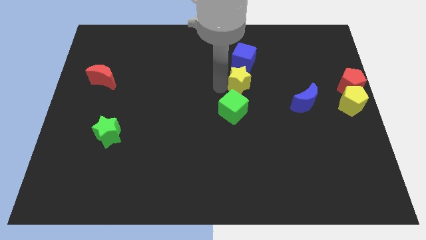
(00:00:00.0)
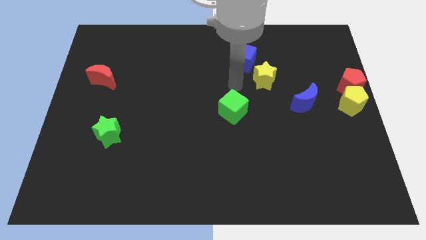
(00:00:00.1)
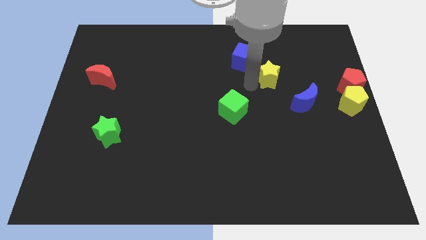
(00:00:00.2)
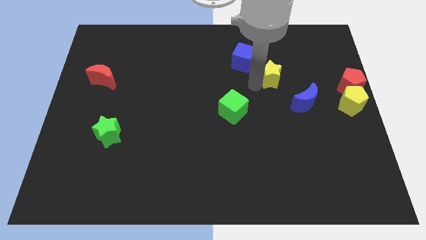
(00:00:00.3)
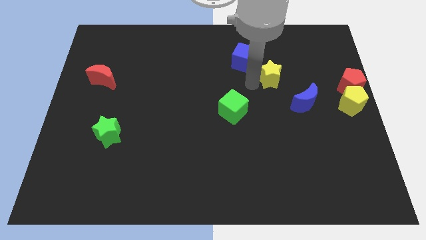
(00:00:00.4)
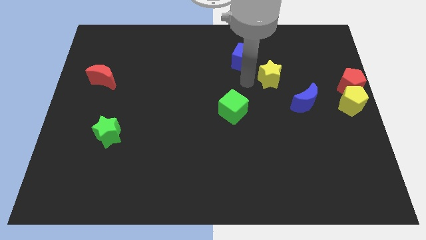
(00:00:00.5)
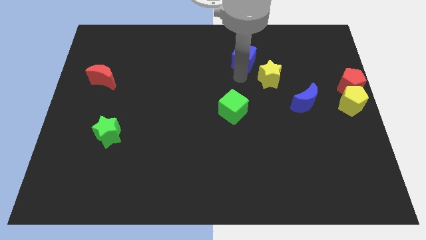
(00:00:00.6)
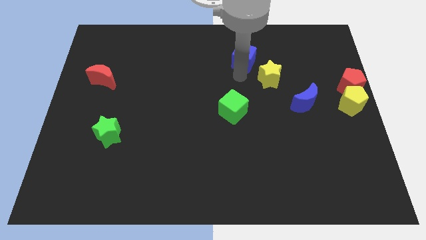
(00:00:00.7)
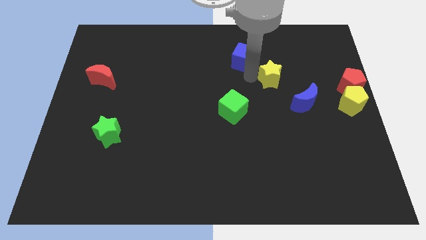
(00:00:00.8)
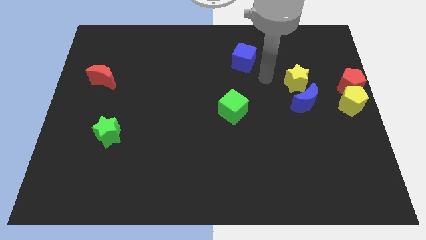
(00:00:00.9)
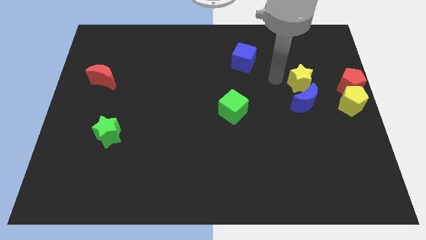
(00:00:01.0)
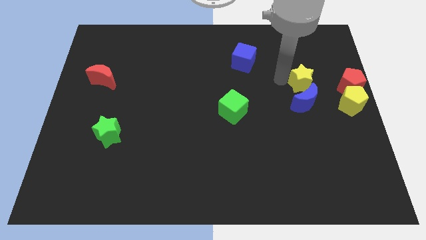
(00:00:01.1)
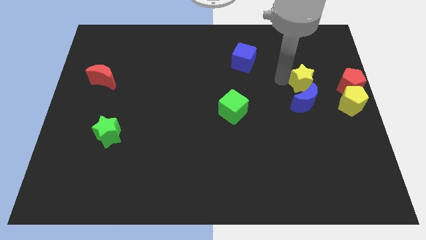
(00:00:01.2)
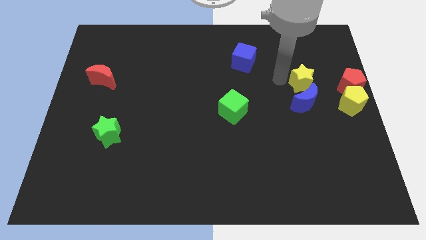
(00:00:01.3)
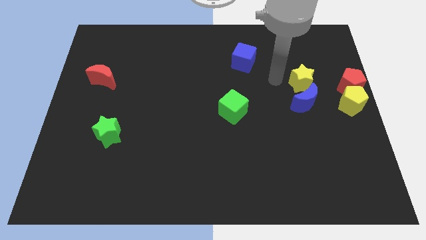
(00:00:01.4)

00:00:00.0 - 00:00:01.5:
move the yellow star to the top side of the blue moon

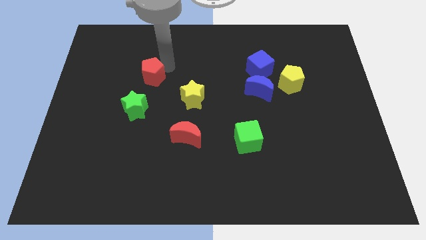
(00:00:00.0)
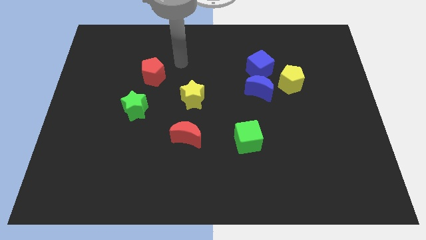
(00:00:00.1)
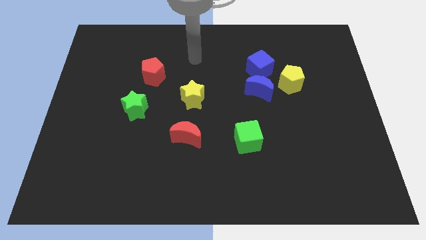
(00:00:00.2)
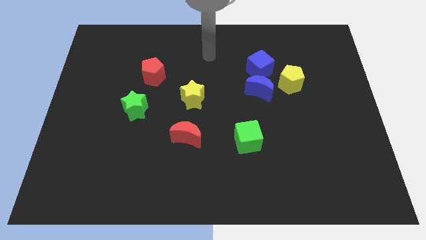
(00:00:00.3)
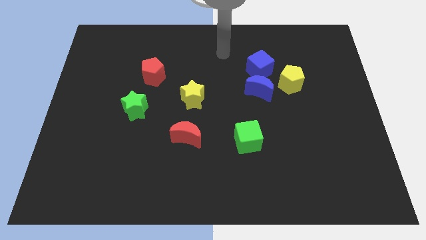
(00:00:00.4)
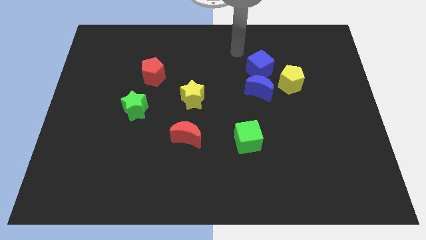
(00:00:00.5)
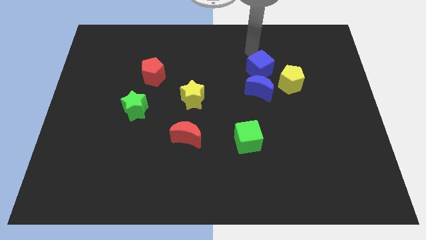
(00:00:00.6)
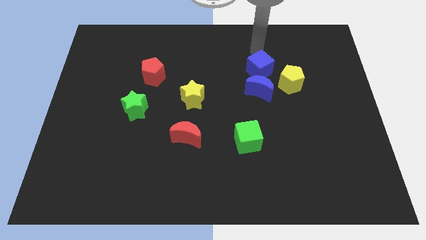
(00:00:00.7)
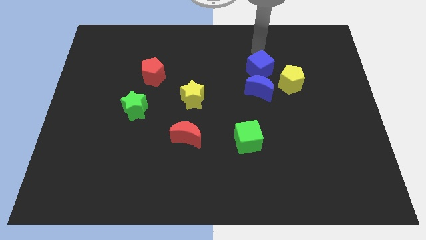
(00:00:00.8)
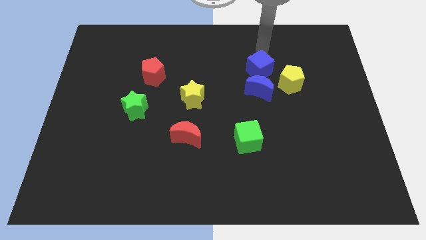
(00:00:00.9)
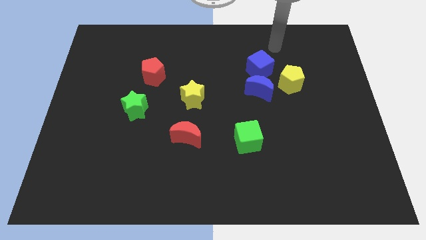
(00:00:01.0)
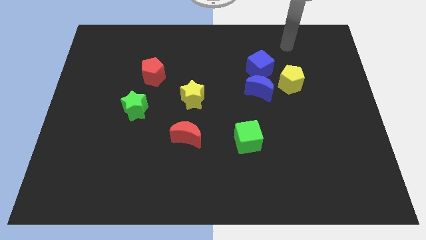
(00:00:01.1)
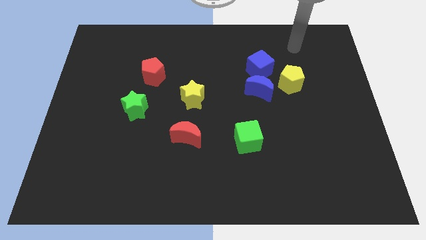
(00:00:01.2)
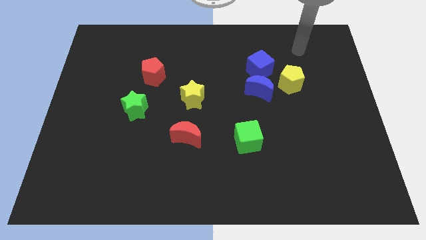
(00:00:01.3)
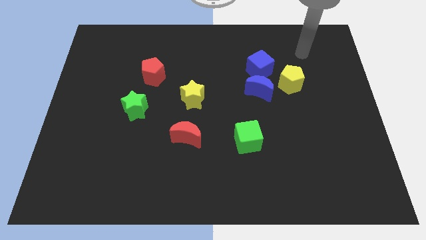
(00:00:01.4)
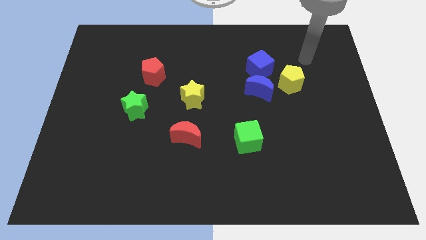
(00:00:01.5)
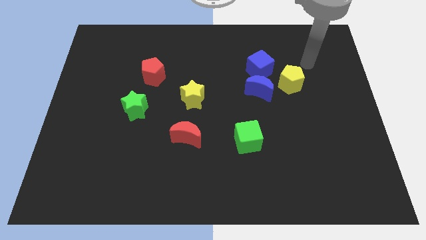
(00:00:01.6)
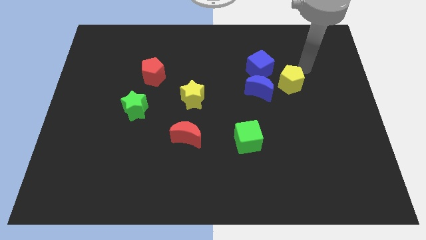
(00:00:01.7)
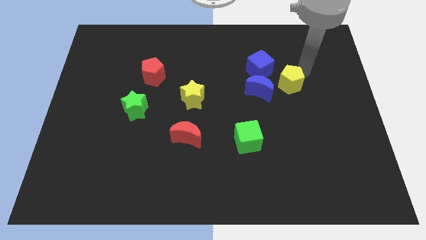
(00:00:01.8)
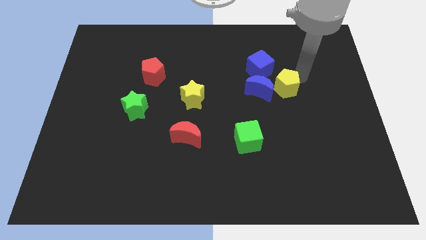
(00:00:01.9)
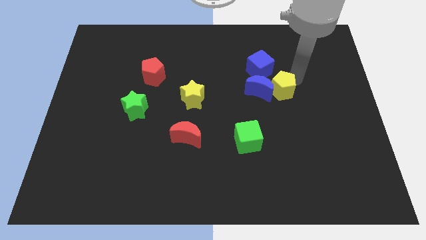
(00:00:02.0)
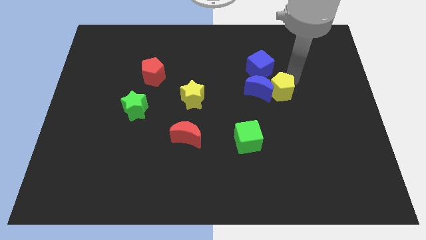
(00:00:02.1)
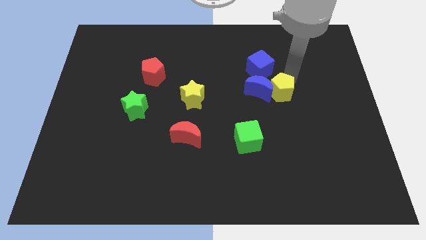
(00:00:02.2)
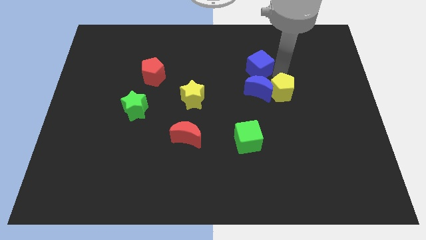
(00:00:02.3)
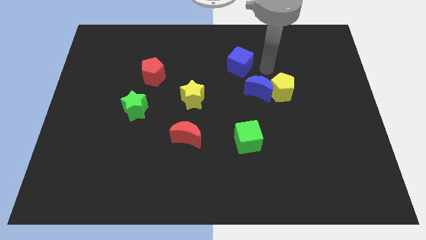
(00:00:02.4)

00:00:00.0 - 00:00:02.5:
push yellow pentagon beside blue crescent

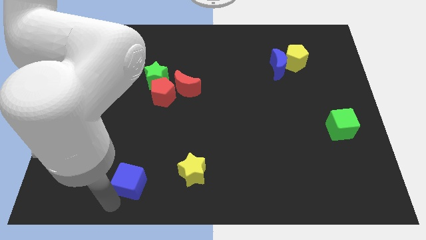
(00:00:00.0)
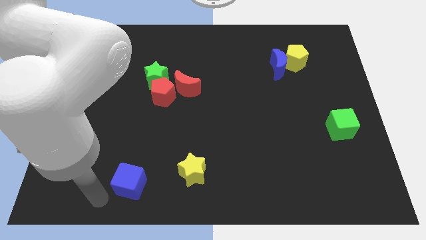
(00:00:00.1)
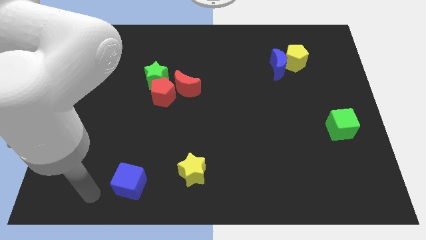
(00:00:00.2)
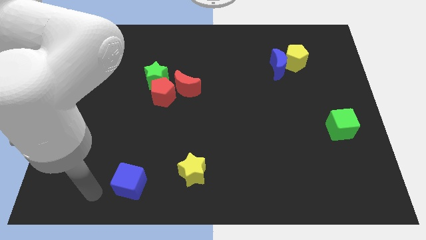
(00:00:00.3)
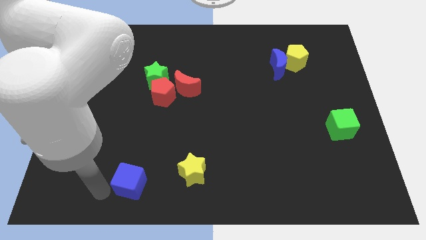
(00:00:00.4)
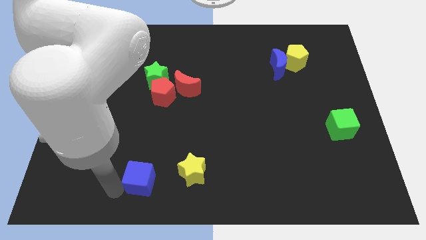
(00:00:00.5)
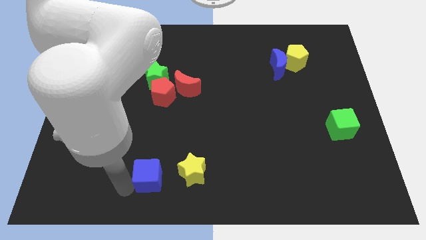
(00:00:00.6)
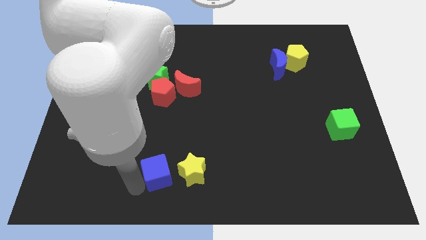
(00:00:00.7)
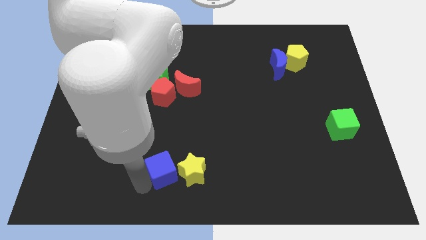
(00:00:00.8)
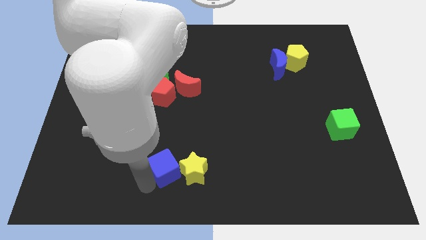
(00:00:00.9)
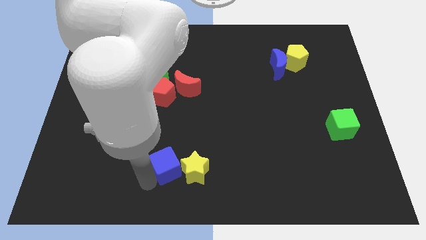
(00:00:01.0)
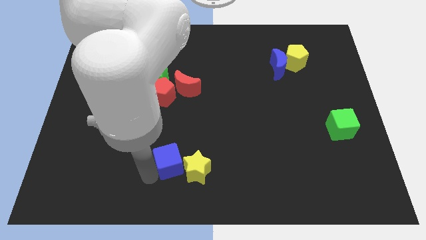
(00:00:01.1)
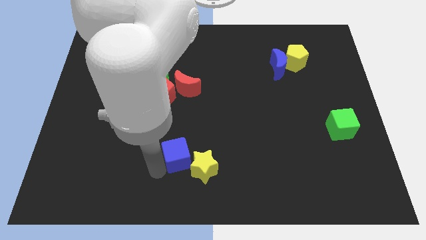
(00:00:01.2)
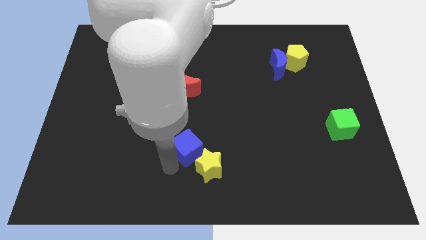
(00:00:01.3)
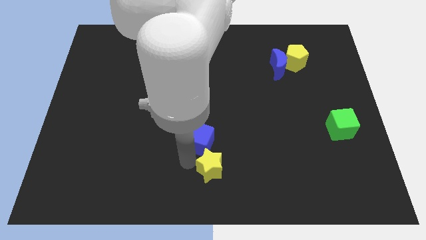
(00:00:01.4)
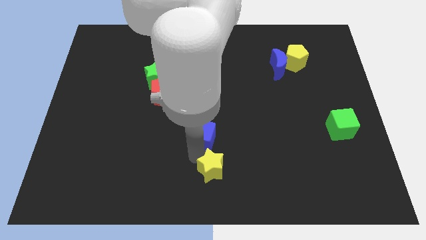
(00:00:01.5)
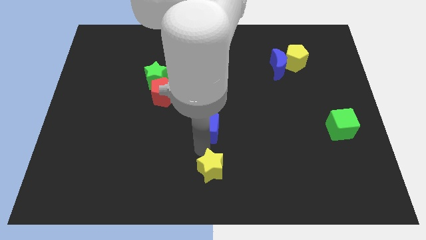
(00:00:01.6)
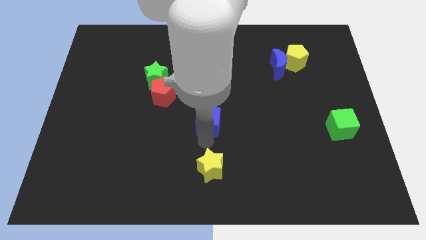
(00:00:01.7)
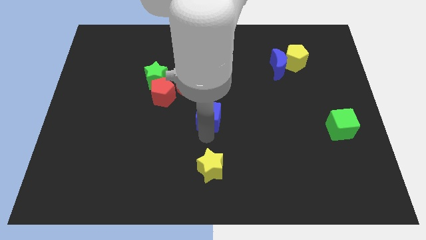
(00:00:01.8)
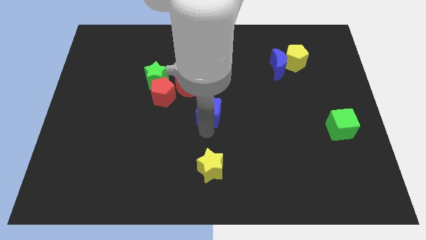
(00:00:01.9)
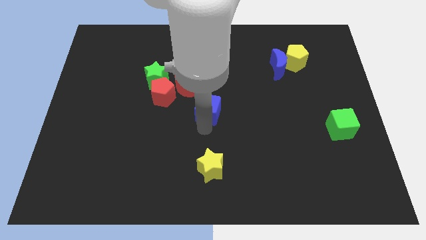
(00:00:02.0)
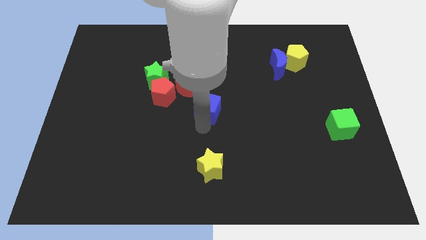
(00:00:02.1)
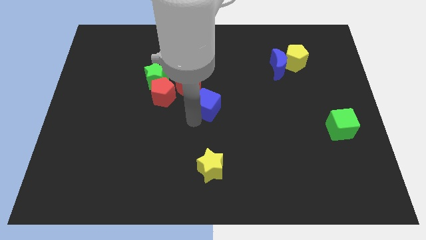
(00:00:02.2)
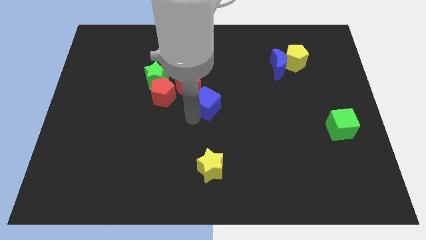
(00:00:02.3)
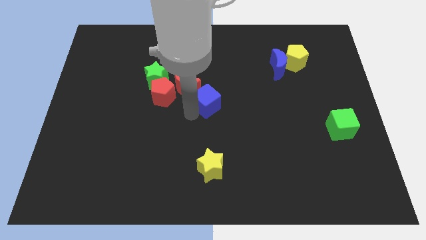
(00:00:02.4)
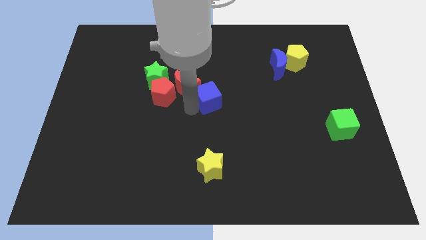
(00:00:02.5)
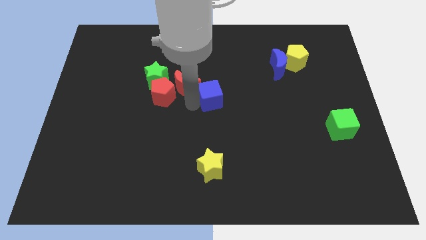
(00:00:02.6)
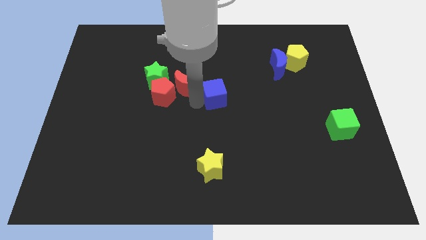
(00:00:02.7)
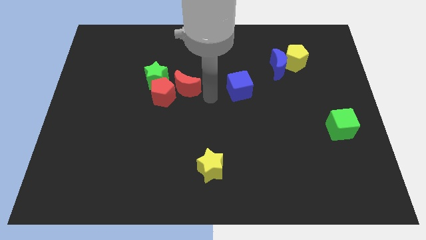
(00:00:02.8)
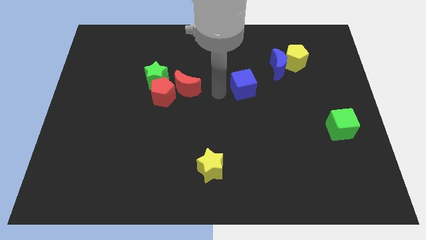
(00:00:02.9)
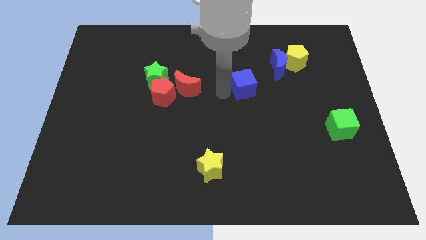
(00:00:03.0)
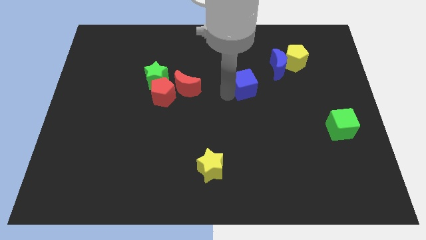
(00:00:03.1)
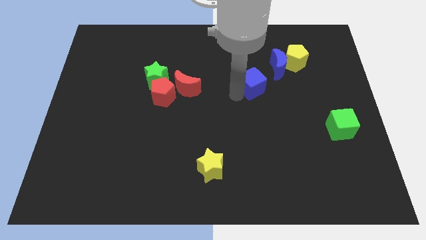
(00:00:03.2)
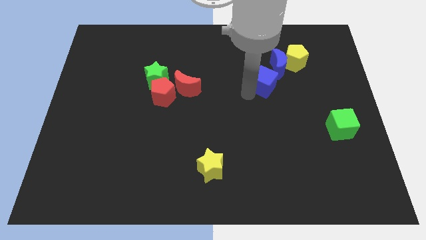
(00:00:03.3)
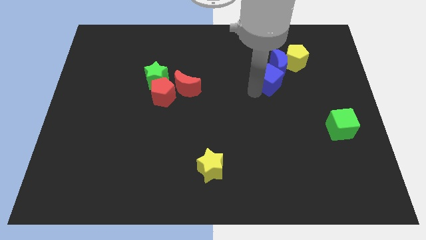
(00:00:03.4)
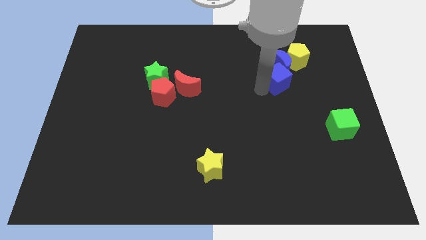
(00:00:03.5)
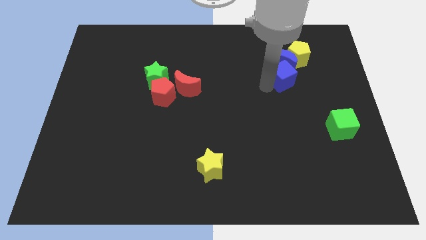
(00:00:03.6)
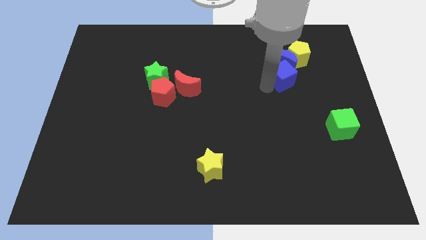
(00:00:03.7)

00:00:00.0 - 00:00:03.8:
move the blue cube into the blue crescent

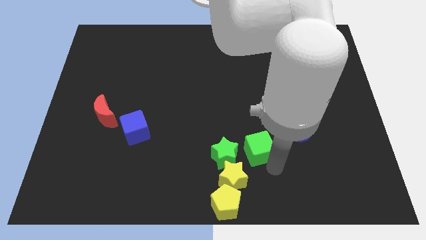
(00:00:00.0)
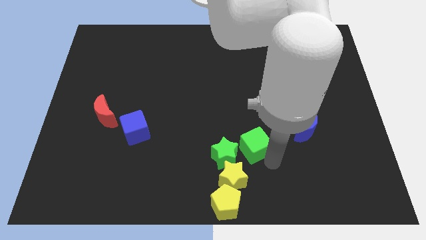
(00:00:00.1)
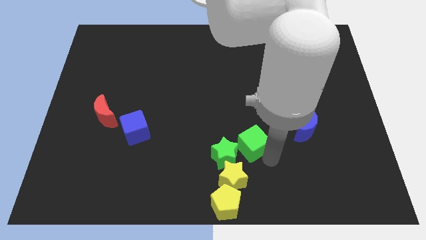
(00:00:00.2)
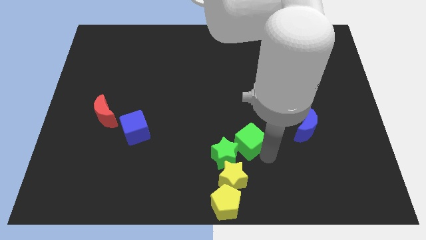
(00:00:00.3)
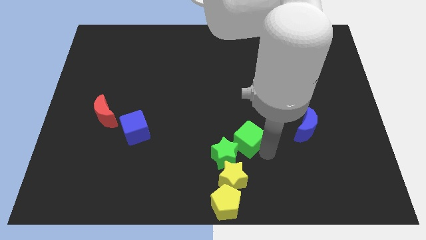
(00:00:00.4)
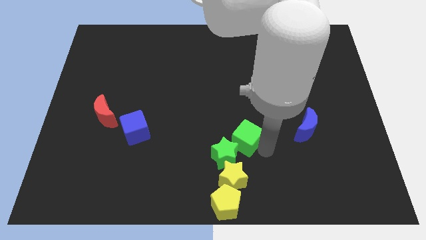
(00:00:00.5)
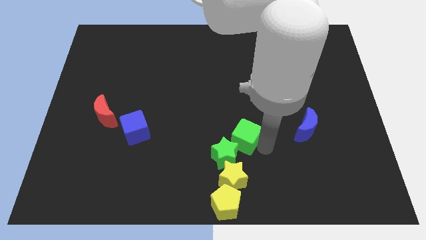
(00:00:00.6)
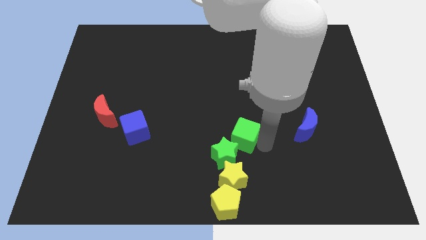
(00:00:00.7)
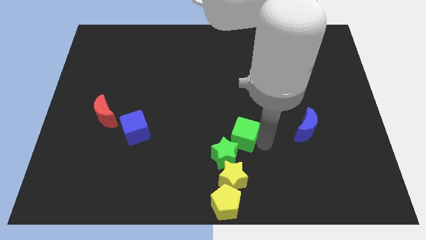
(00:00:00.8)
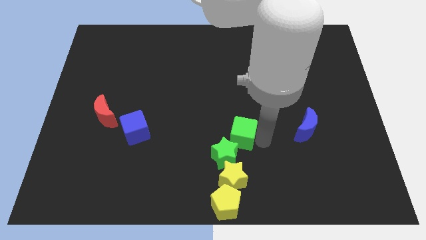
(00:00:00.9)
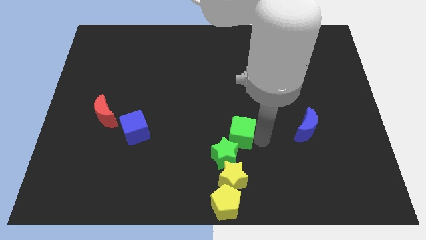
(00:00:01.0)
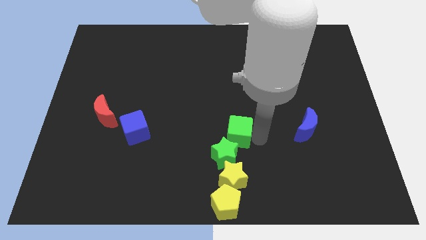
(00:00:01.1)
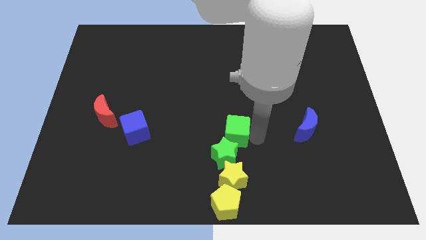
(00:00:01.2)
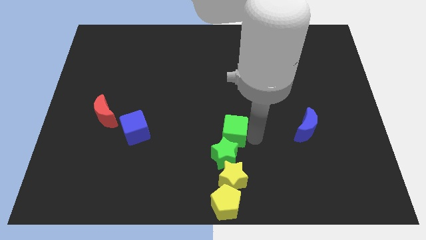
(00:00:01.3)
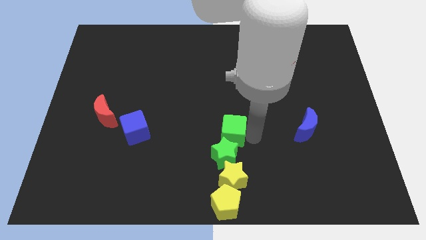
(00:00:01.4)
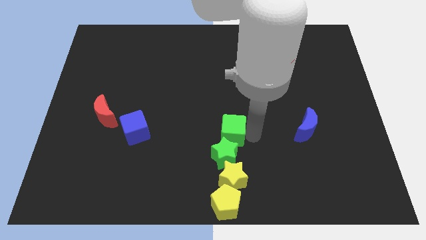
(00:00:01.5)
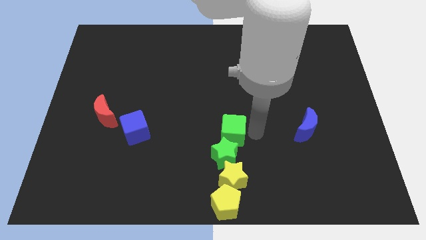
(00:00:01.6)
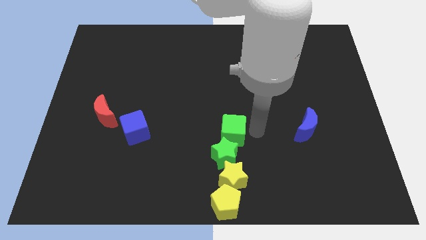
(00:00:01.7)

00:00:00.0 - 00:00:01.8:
move the green cube to the top of the green star
